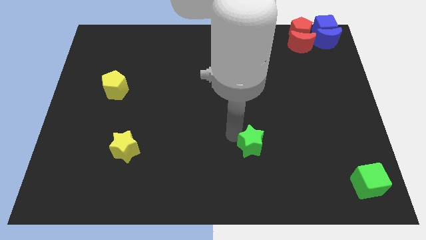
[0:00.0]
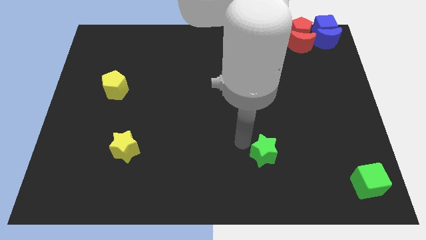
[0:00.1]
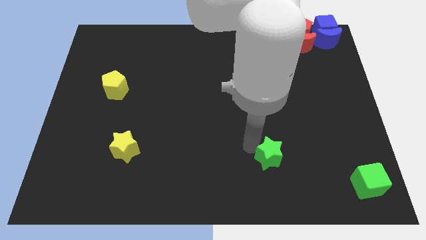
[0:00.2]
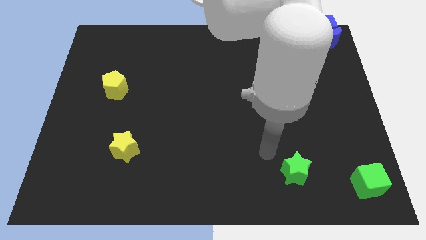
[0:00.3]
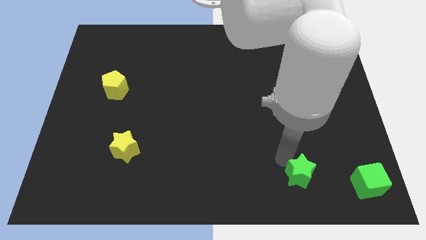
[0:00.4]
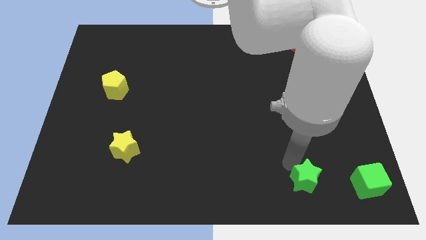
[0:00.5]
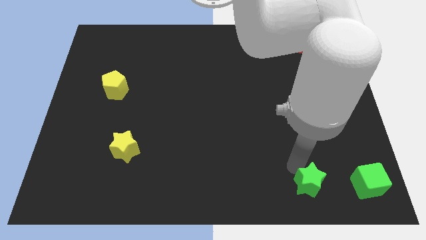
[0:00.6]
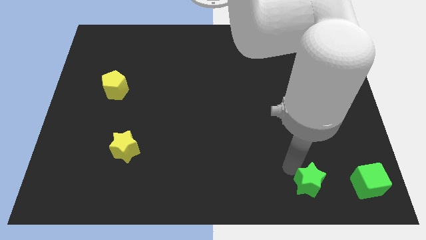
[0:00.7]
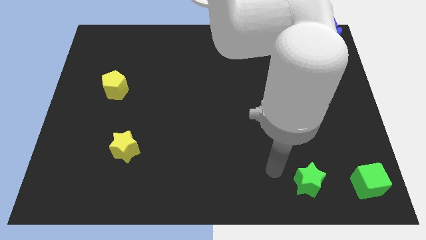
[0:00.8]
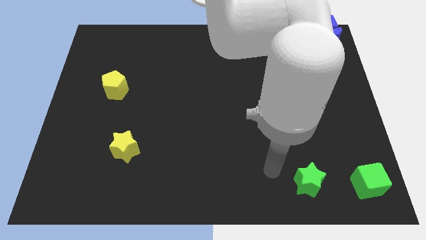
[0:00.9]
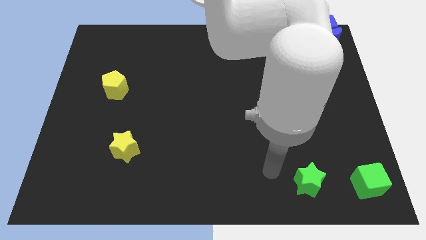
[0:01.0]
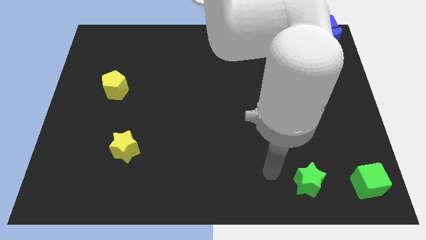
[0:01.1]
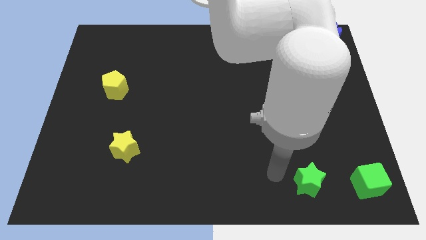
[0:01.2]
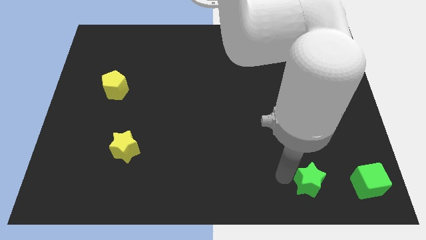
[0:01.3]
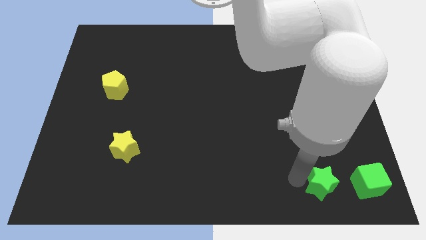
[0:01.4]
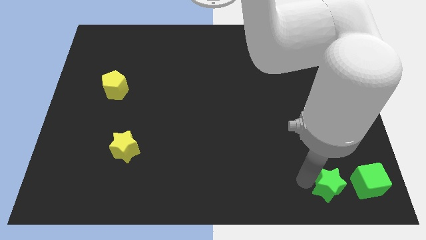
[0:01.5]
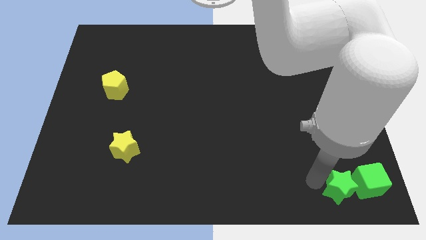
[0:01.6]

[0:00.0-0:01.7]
push green star into green cube

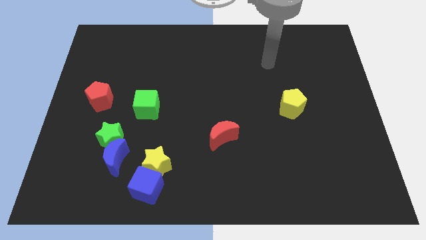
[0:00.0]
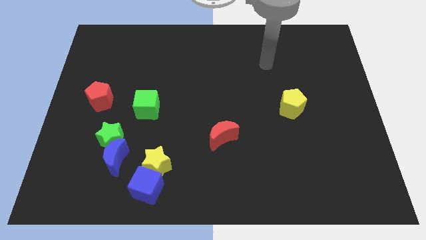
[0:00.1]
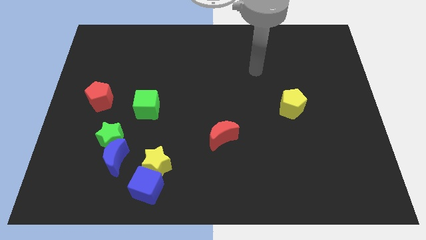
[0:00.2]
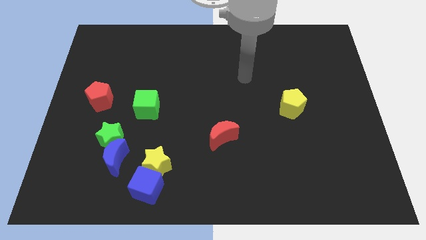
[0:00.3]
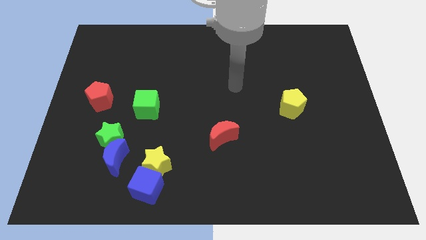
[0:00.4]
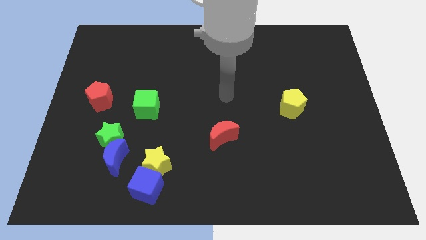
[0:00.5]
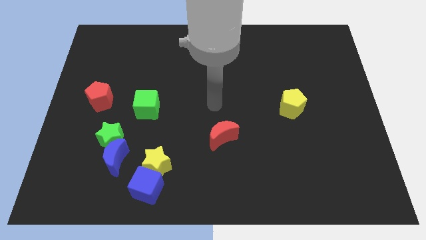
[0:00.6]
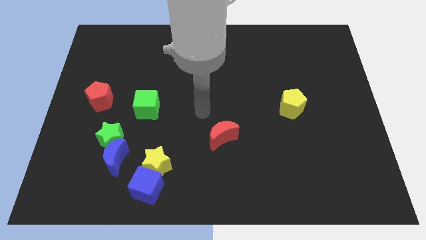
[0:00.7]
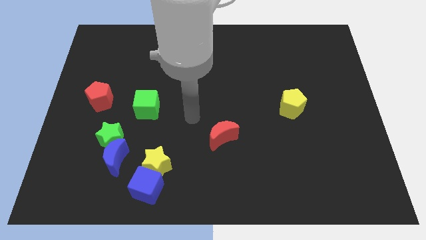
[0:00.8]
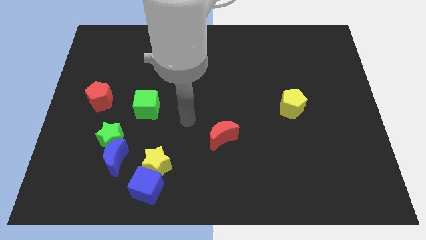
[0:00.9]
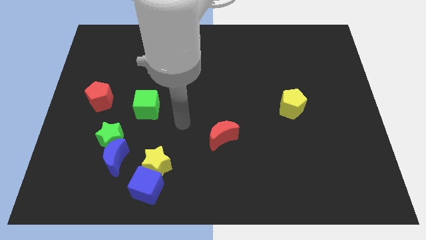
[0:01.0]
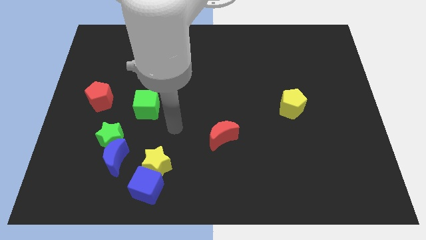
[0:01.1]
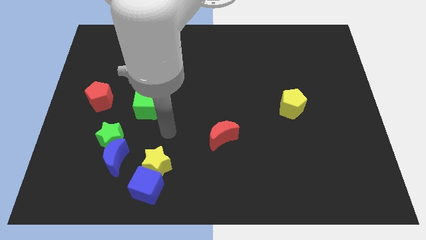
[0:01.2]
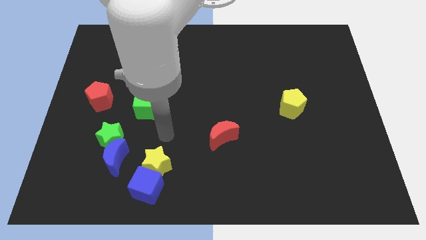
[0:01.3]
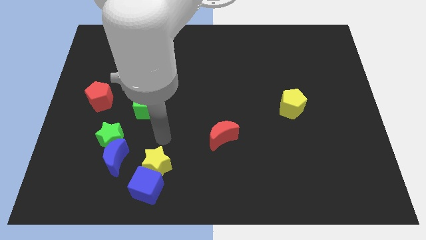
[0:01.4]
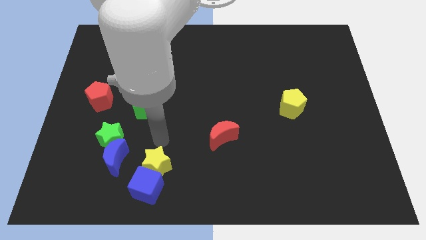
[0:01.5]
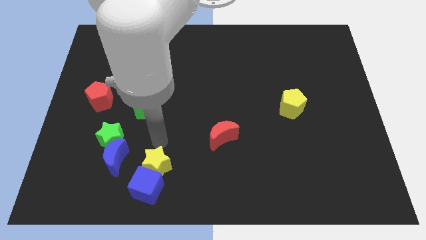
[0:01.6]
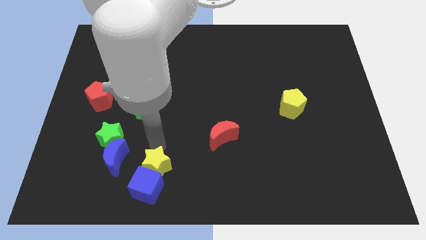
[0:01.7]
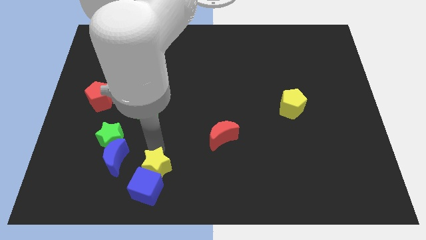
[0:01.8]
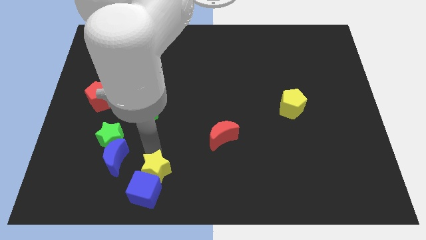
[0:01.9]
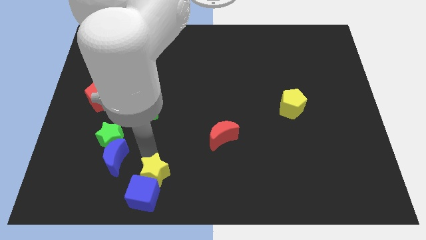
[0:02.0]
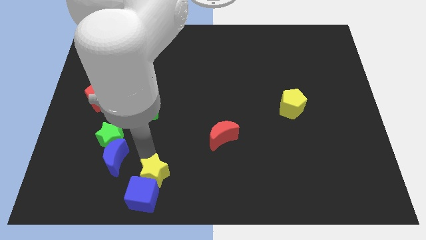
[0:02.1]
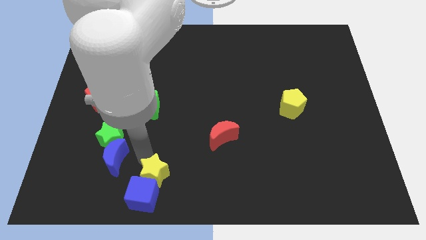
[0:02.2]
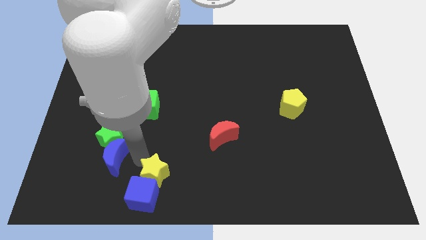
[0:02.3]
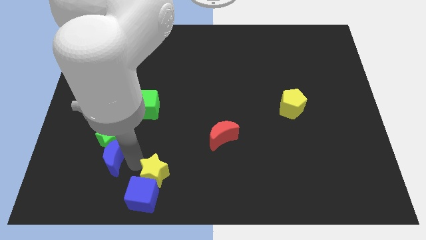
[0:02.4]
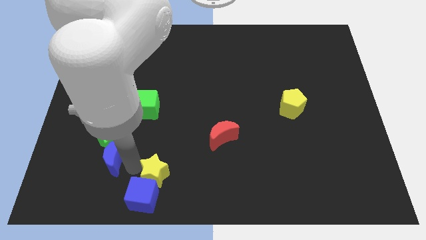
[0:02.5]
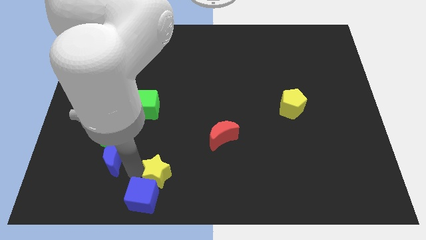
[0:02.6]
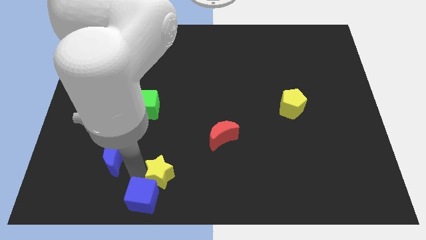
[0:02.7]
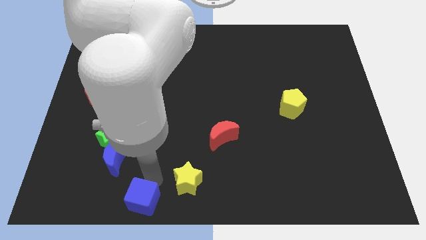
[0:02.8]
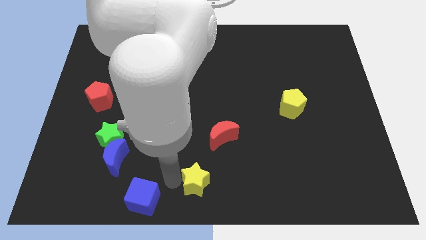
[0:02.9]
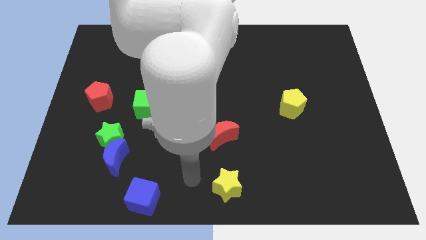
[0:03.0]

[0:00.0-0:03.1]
push blue cube with yellow star

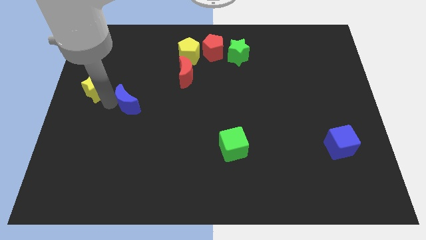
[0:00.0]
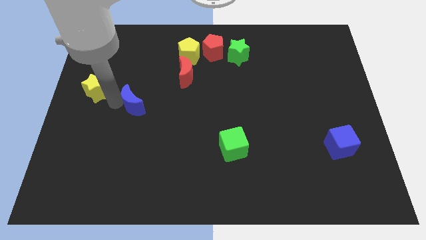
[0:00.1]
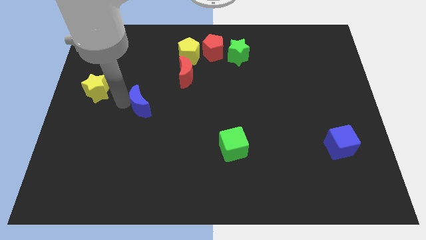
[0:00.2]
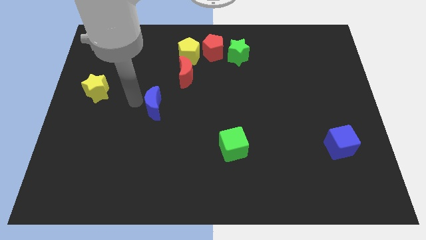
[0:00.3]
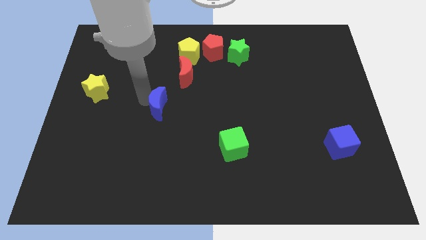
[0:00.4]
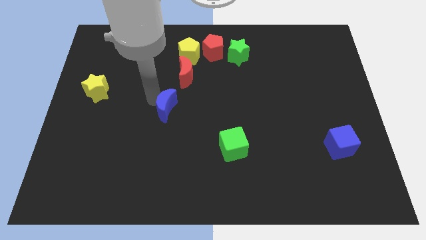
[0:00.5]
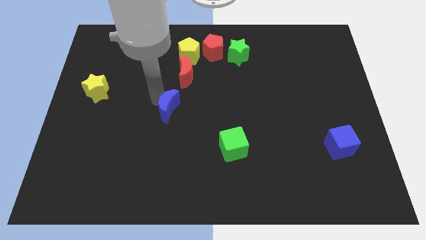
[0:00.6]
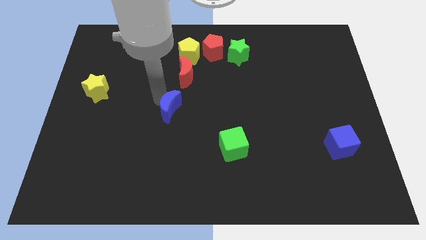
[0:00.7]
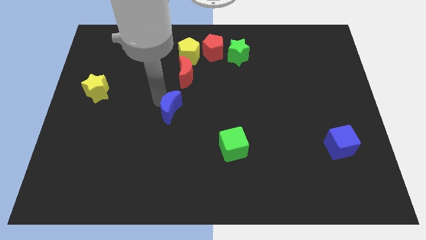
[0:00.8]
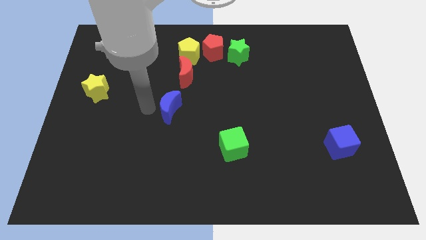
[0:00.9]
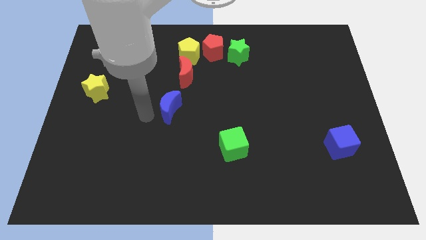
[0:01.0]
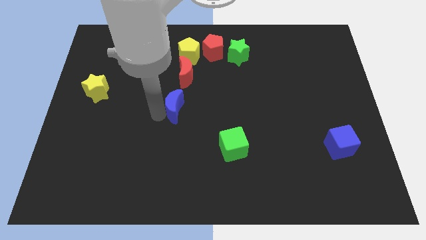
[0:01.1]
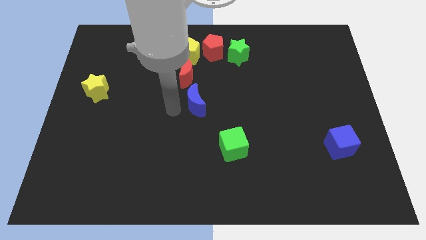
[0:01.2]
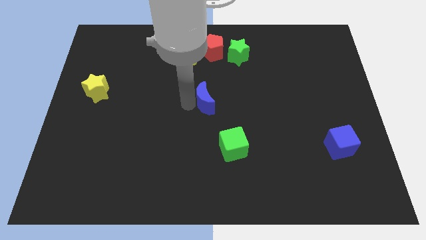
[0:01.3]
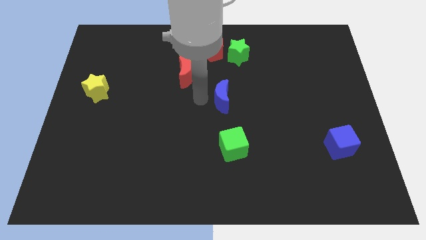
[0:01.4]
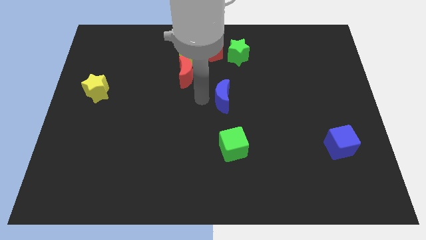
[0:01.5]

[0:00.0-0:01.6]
place the blue moon vertically to the top of the green cube

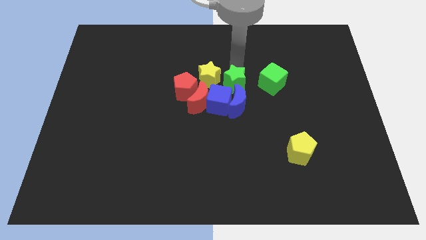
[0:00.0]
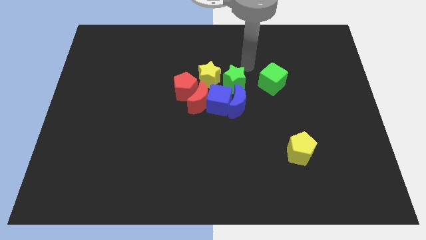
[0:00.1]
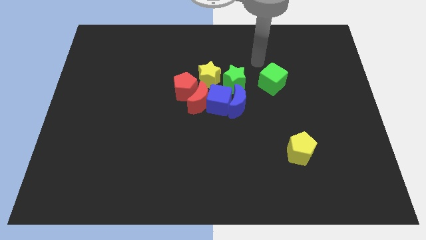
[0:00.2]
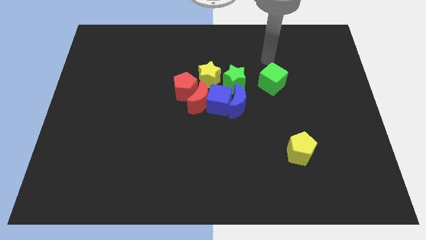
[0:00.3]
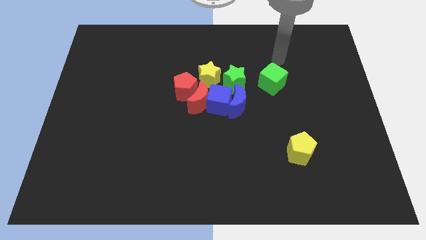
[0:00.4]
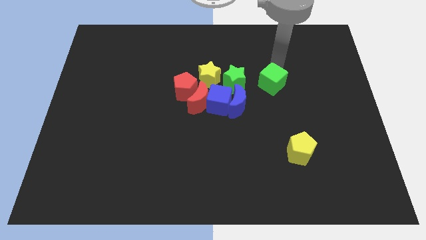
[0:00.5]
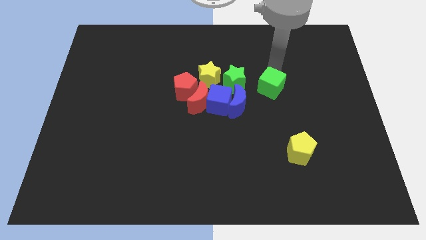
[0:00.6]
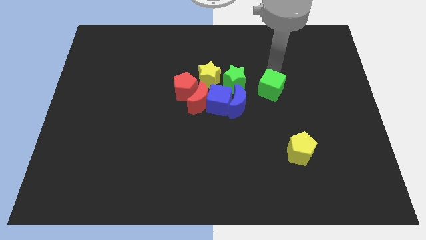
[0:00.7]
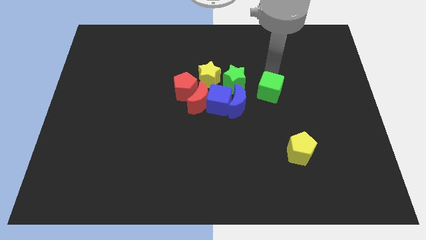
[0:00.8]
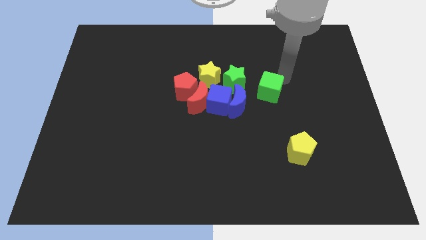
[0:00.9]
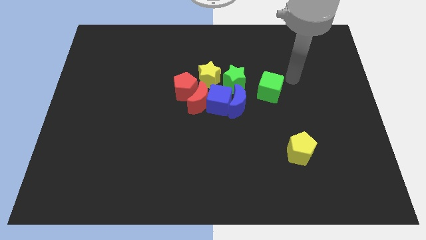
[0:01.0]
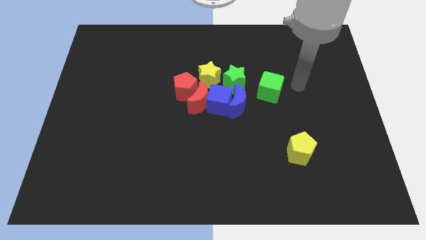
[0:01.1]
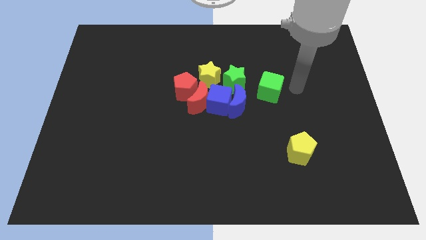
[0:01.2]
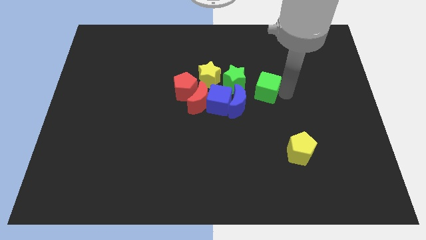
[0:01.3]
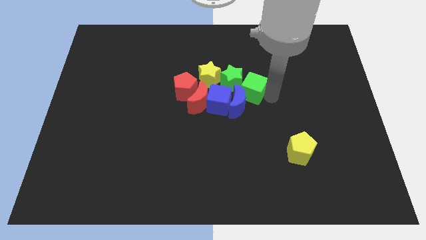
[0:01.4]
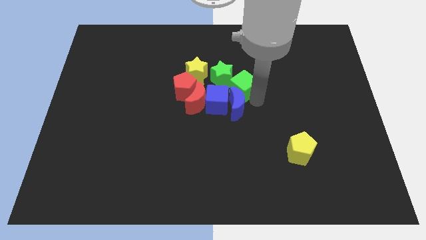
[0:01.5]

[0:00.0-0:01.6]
move the green cube into the green star

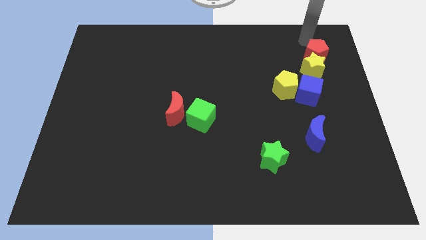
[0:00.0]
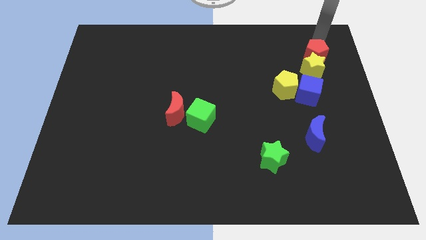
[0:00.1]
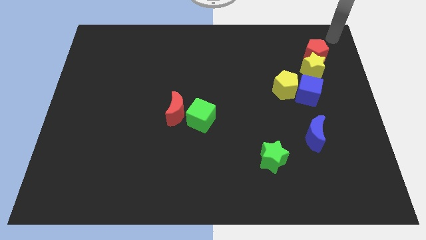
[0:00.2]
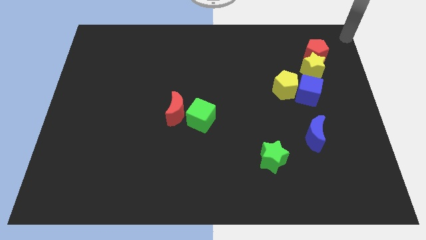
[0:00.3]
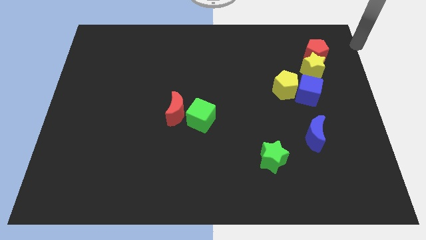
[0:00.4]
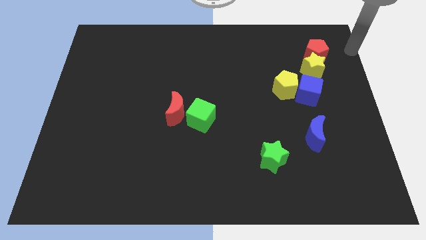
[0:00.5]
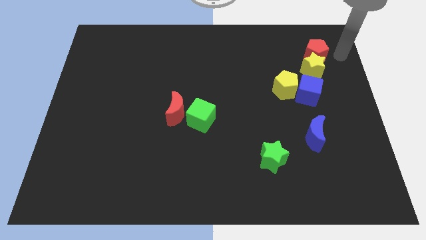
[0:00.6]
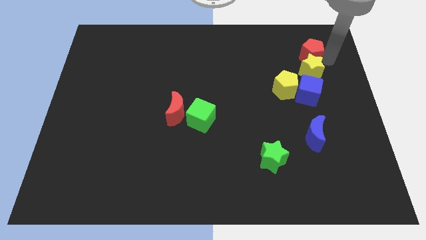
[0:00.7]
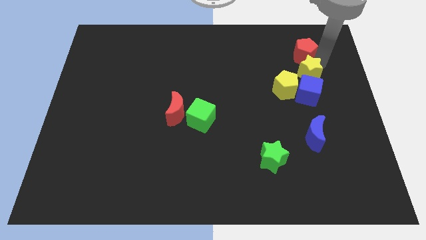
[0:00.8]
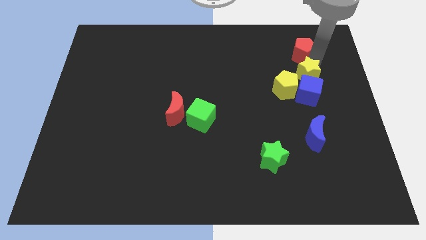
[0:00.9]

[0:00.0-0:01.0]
push the red pentagon slightly to the top
